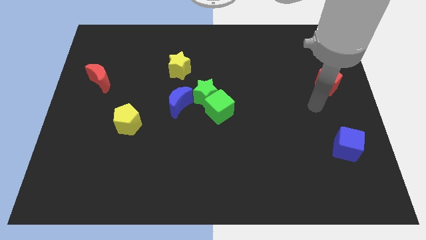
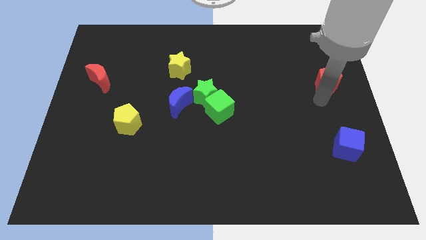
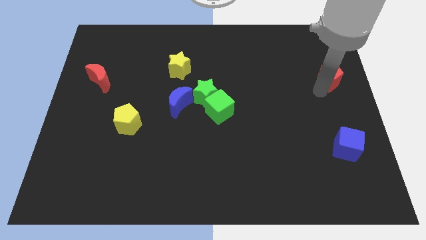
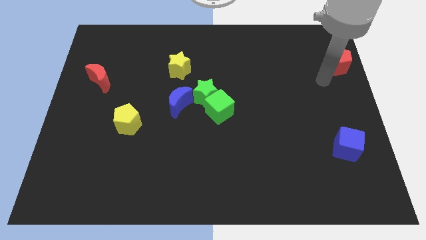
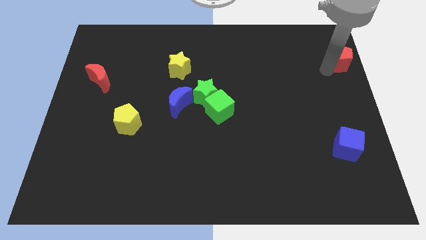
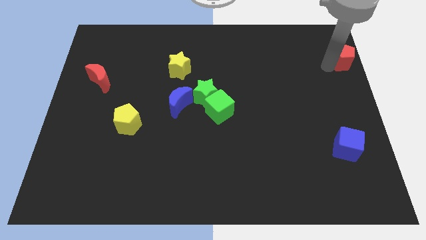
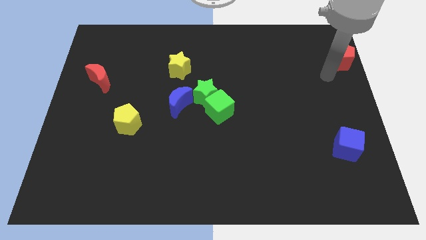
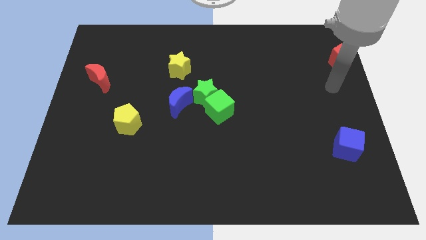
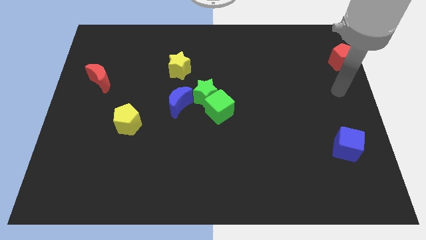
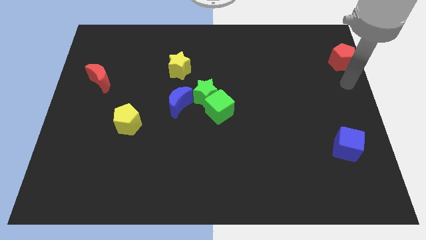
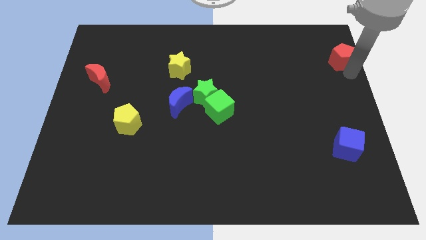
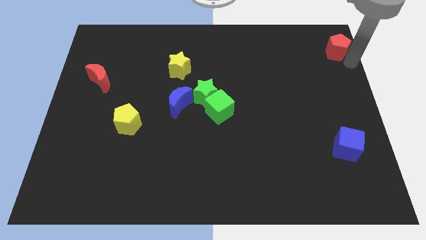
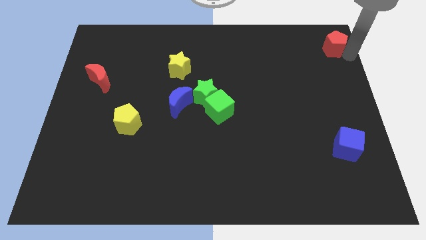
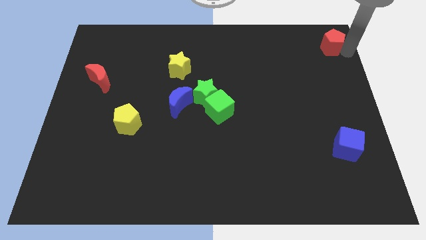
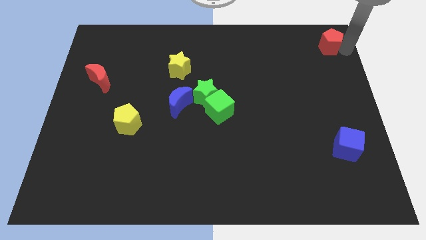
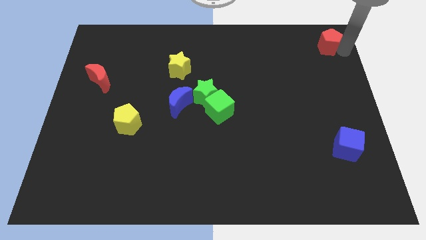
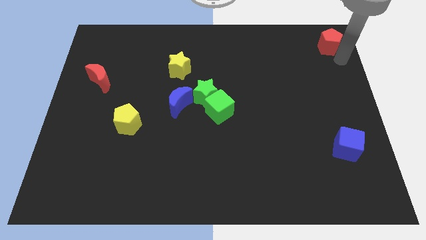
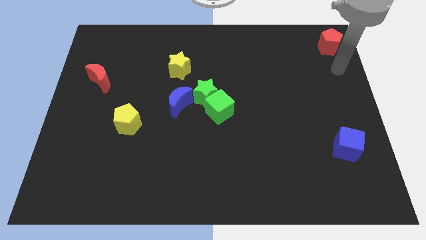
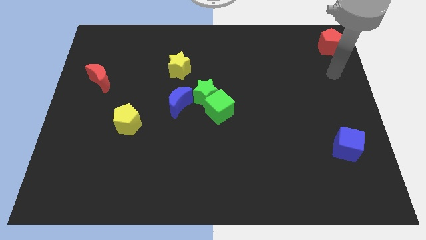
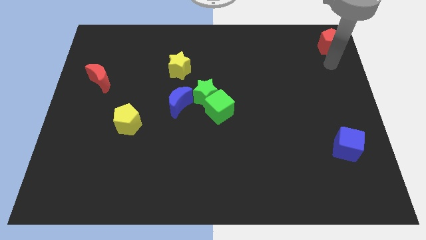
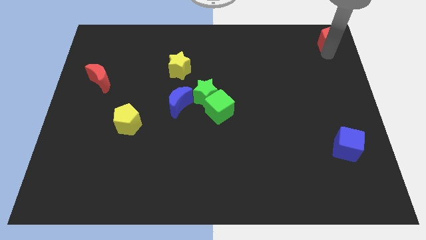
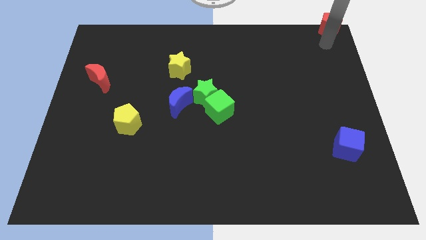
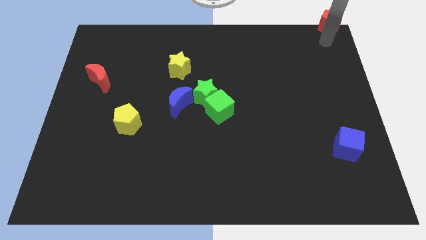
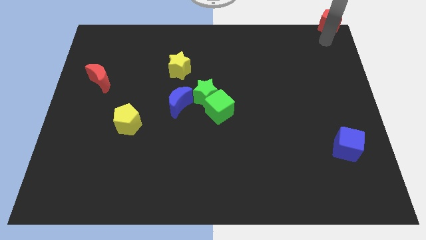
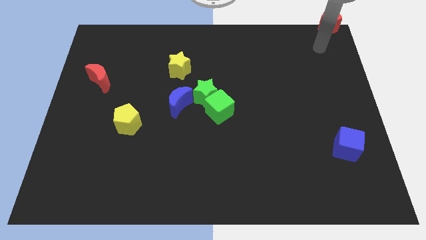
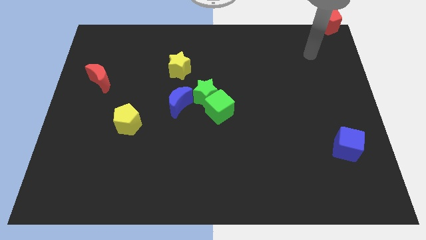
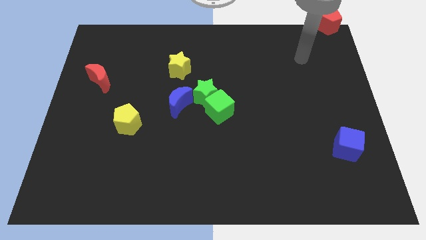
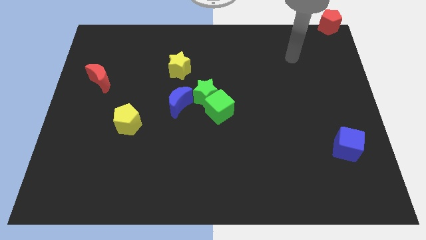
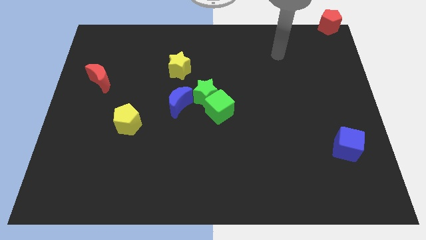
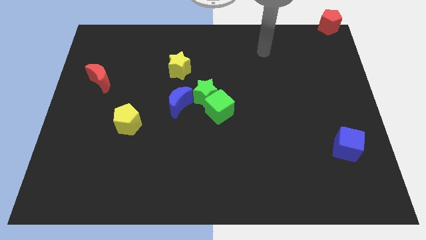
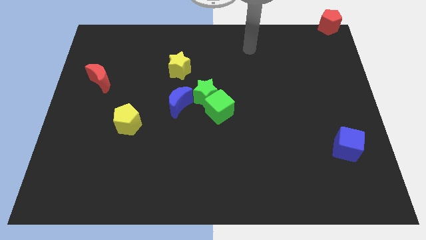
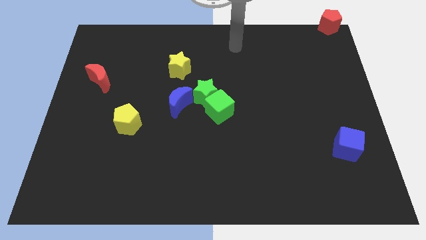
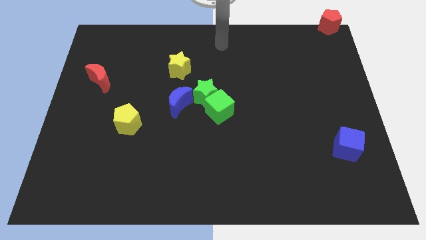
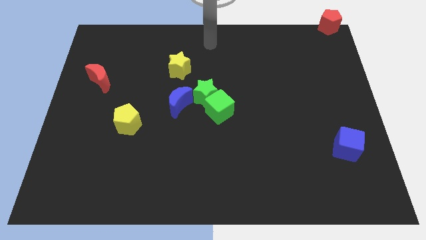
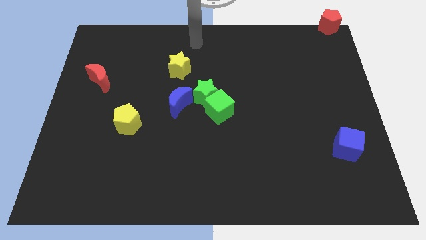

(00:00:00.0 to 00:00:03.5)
place the red pentagon to the top right corner of the board

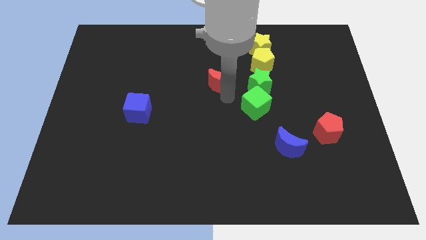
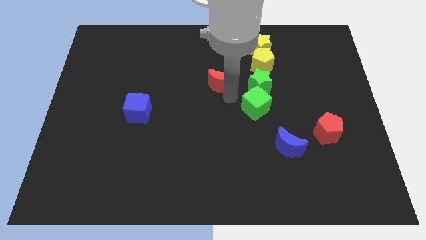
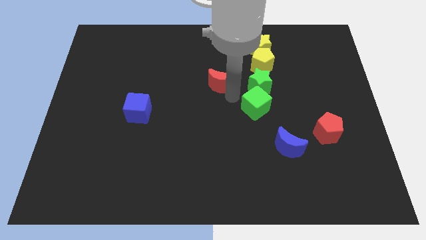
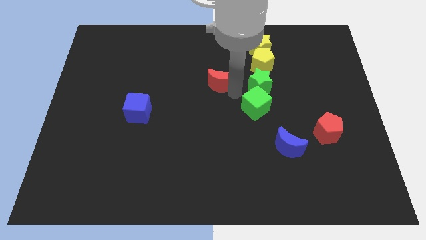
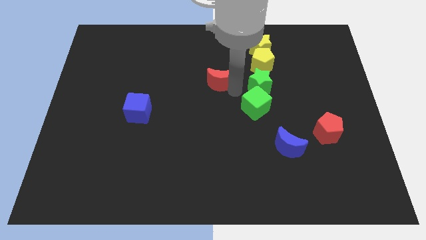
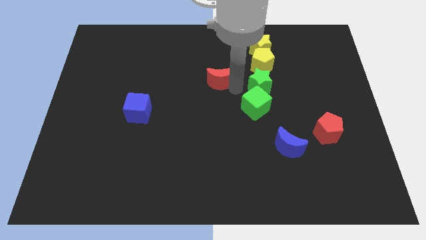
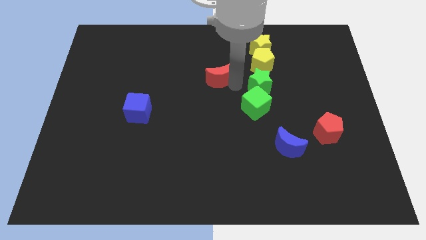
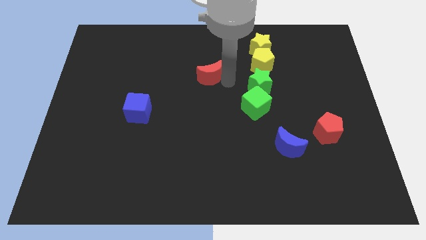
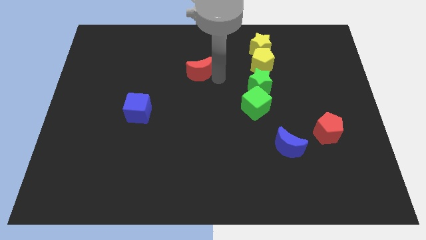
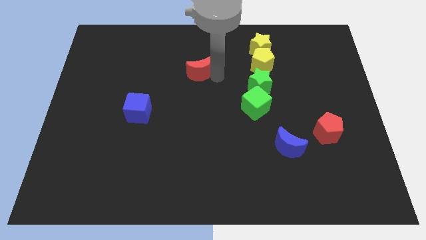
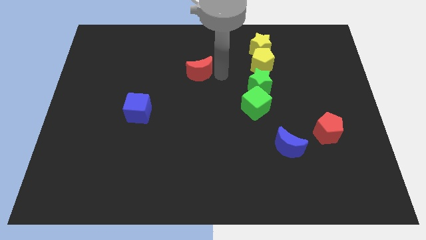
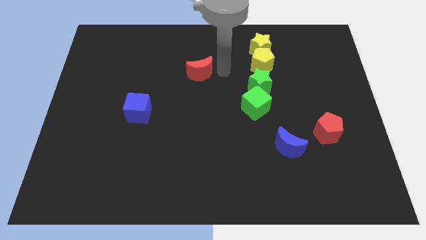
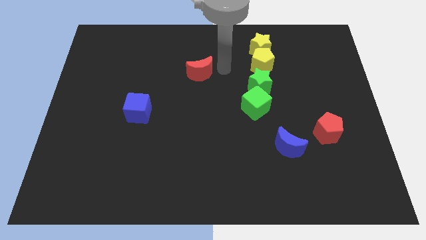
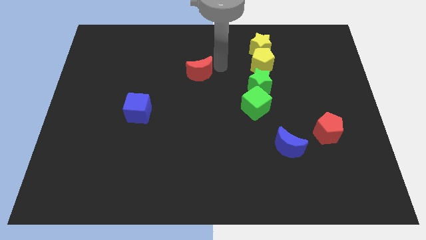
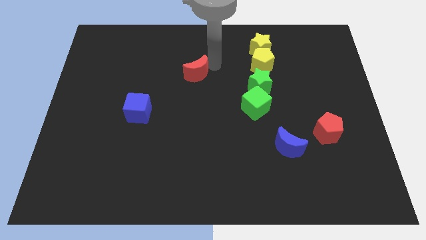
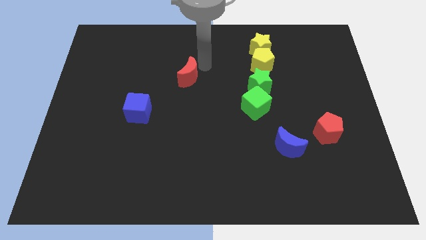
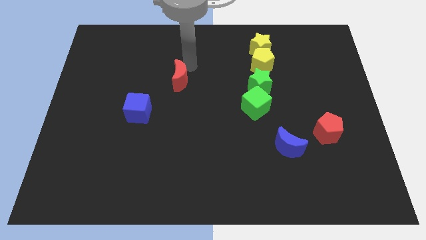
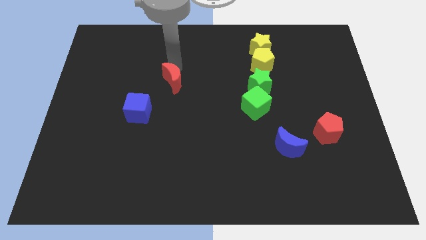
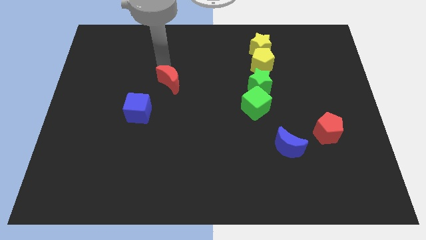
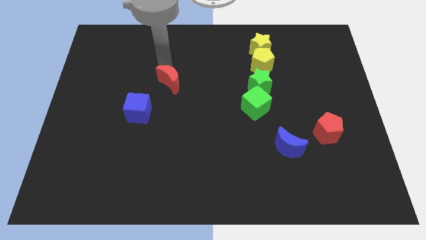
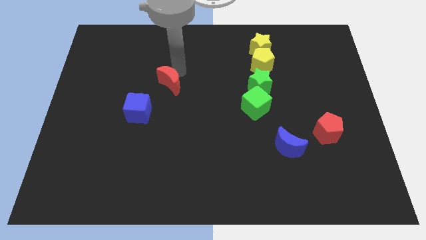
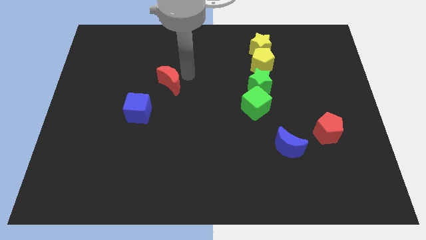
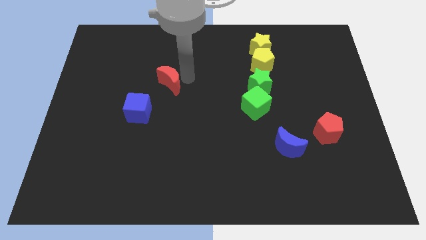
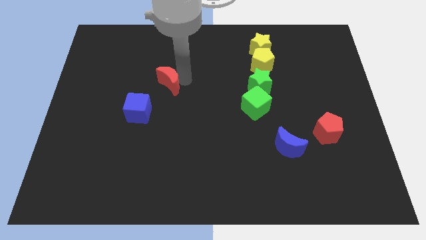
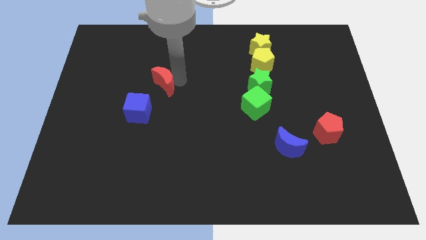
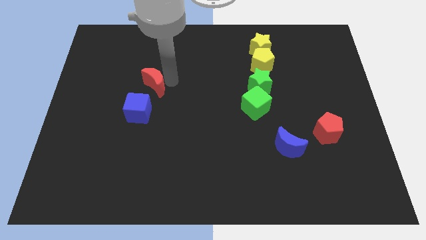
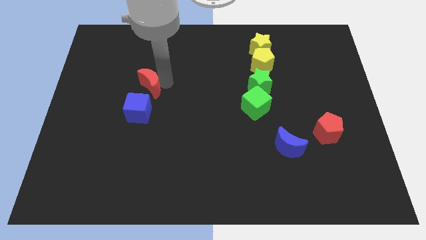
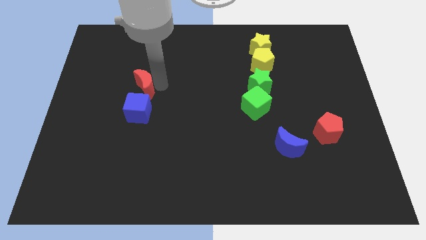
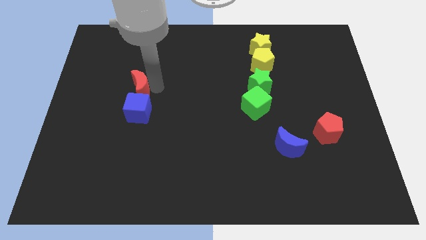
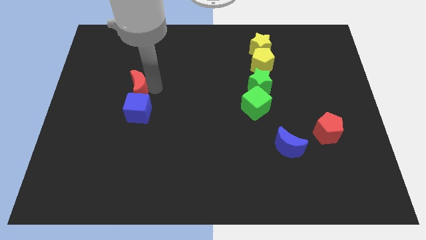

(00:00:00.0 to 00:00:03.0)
place the red crescent above the blue cube

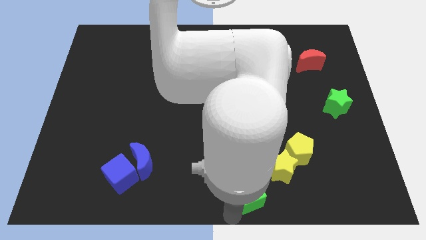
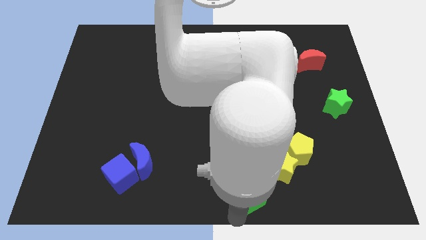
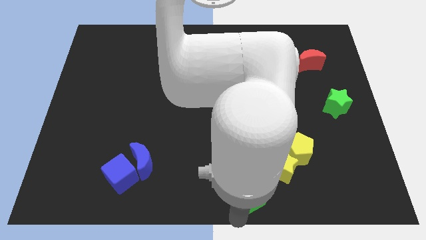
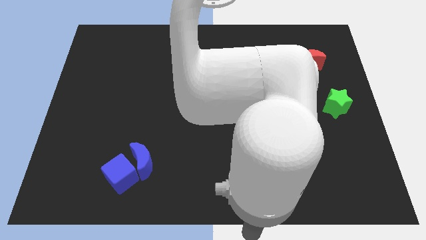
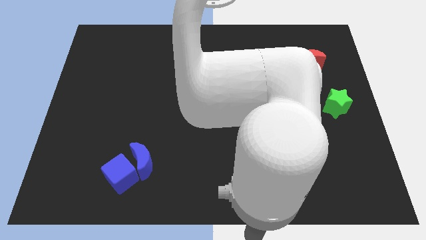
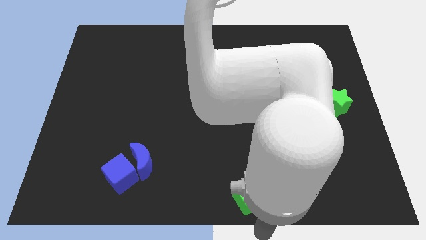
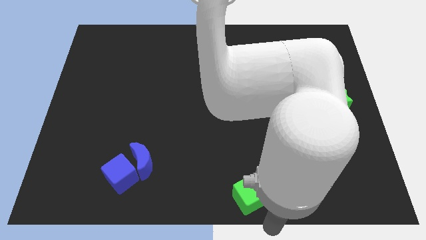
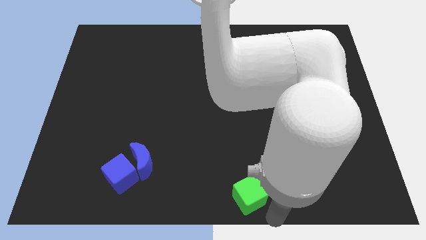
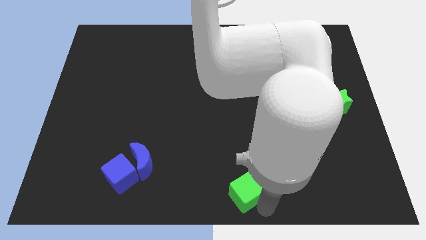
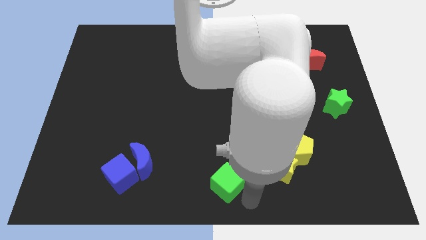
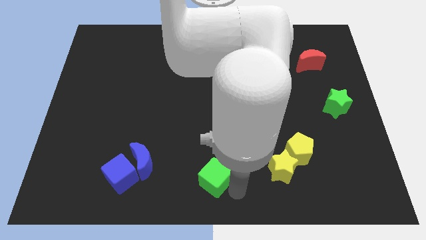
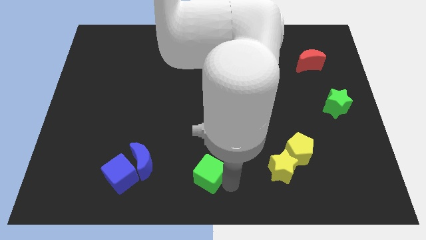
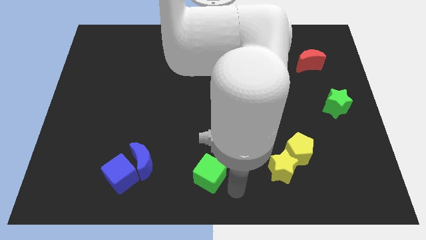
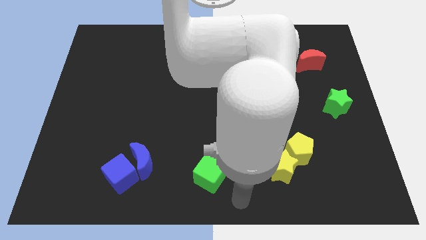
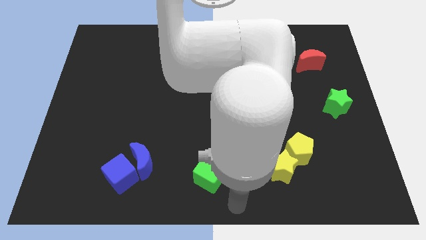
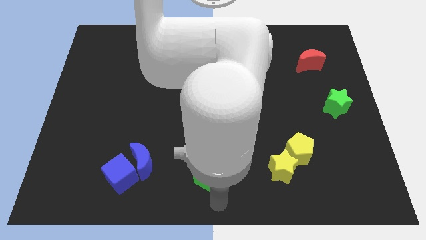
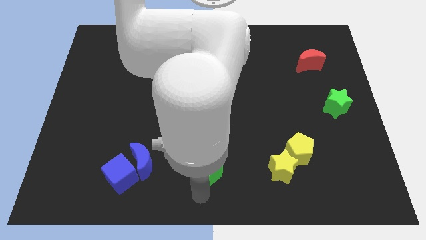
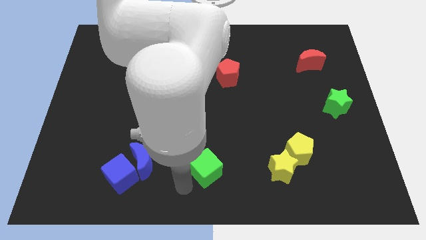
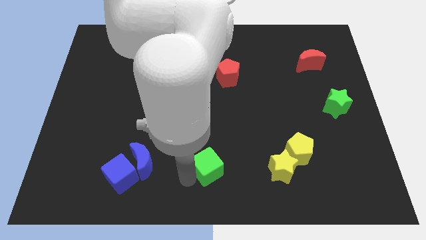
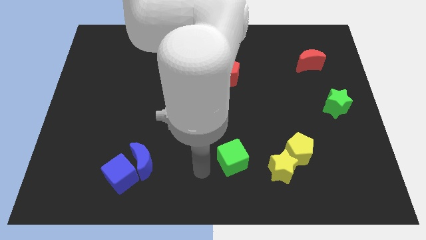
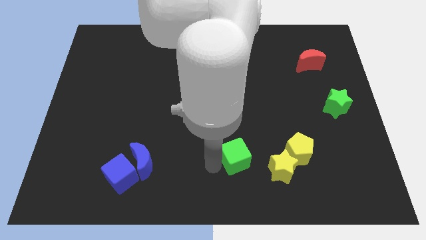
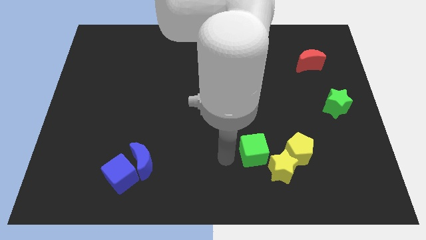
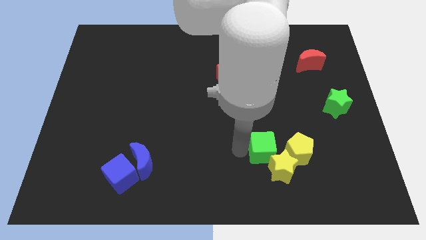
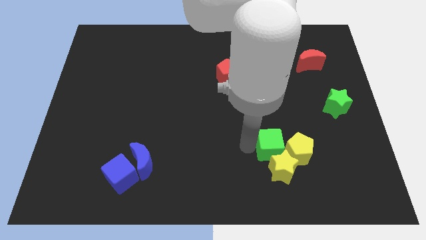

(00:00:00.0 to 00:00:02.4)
place the green cube to the left of yellow pentagon and yellow star

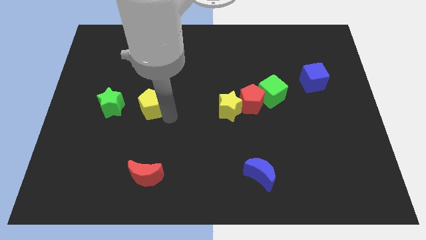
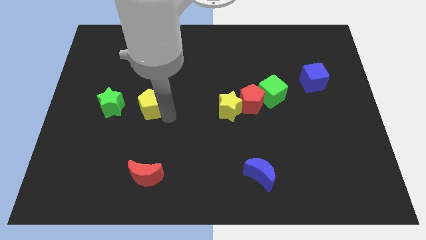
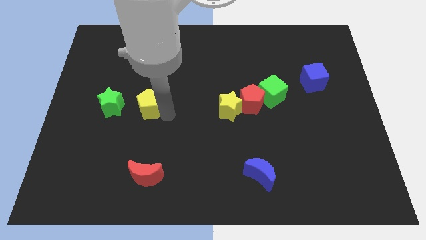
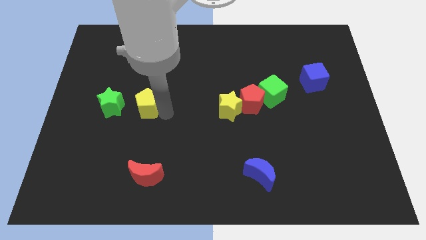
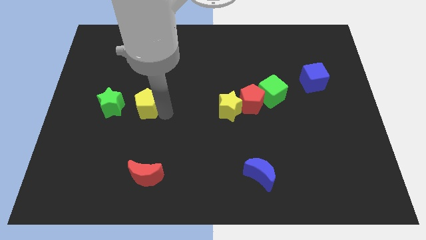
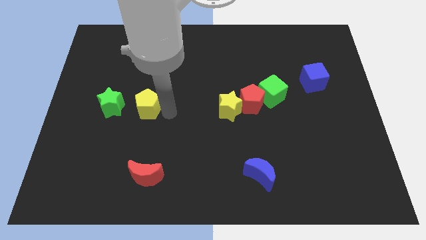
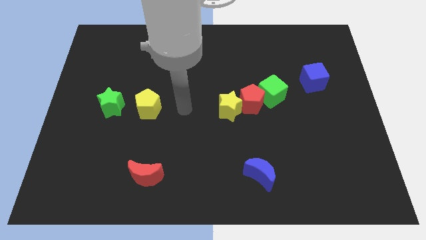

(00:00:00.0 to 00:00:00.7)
slightly push yellow pentagon towards left side
